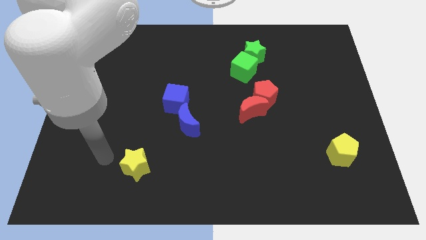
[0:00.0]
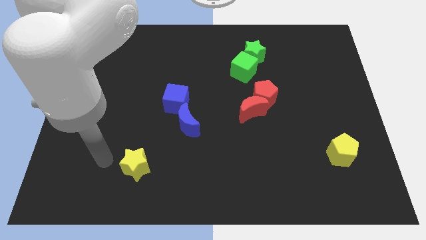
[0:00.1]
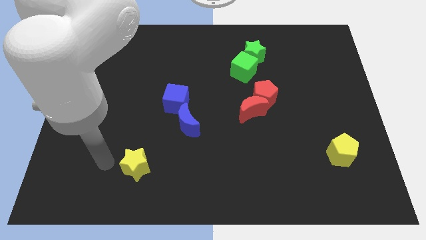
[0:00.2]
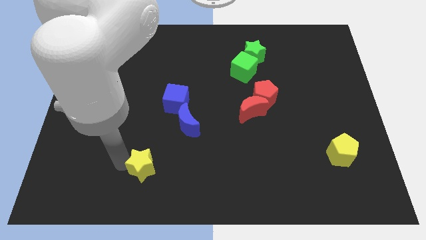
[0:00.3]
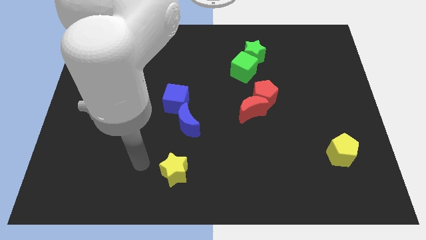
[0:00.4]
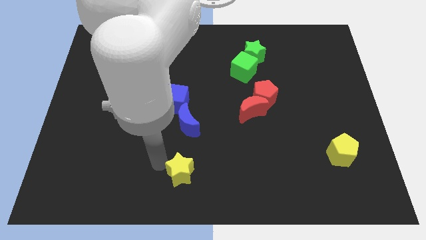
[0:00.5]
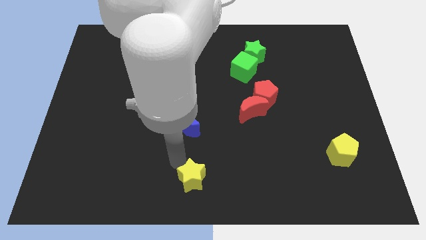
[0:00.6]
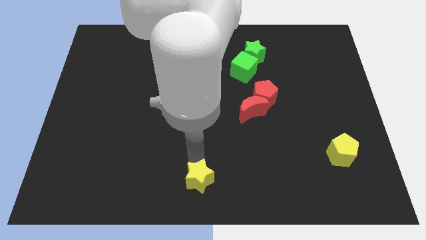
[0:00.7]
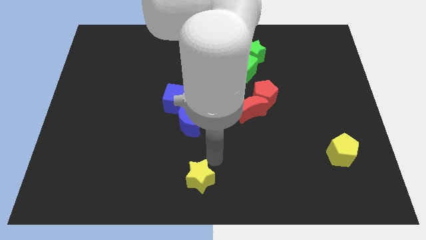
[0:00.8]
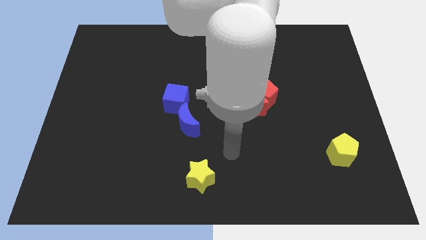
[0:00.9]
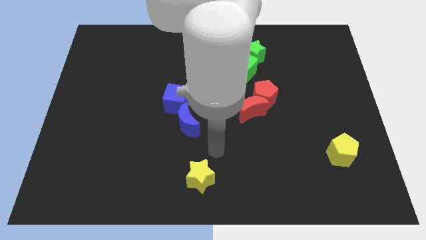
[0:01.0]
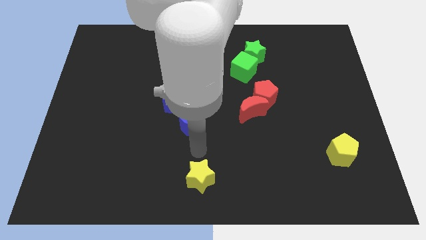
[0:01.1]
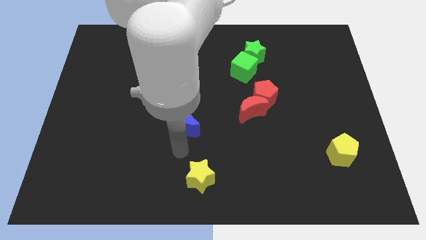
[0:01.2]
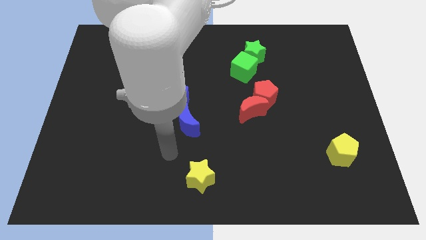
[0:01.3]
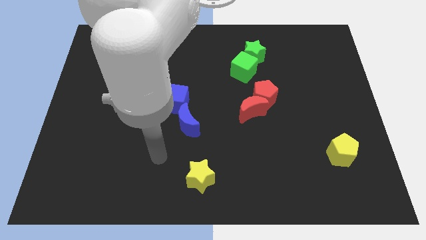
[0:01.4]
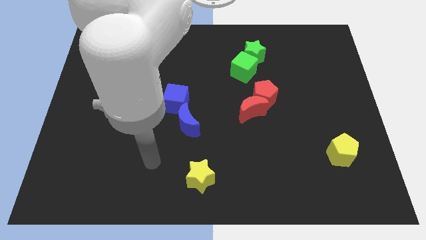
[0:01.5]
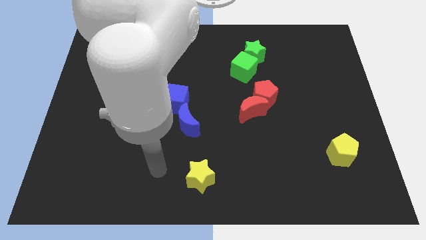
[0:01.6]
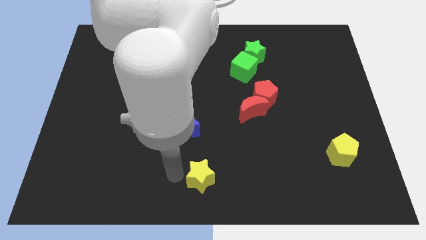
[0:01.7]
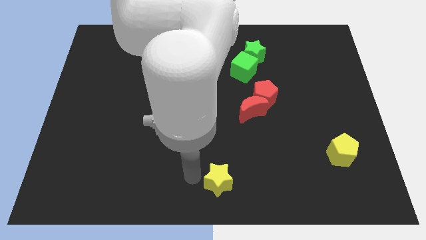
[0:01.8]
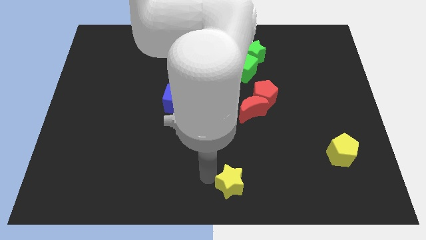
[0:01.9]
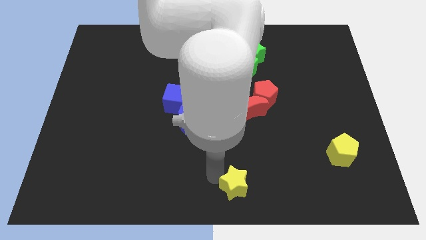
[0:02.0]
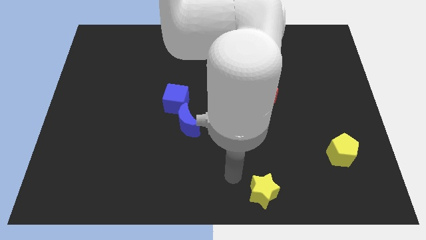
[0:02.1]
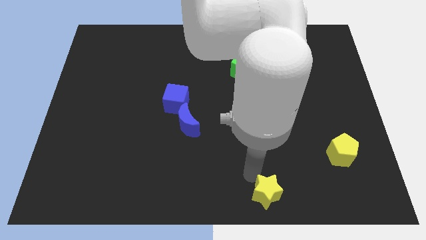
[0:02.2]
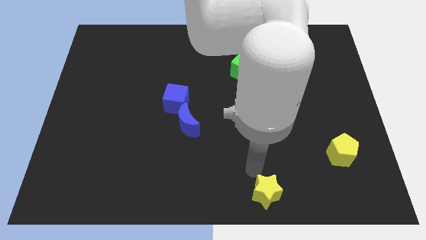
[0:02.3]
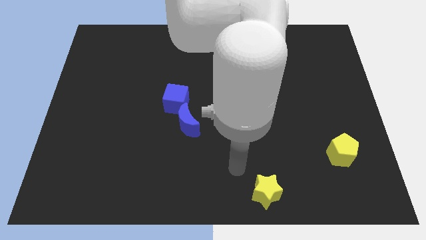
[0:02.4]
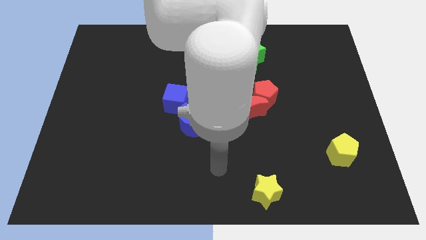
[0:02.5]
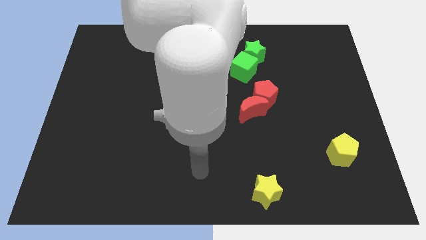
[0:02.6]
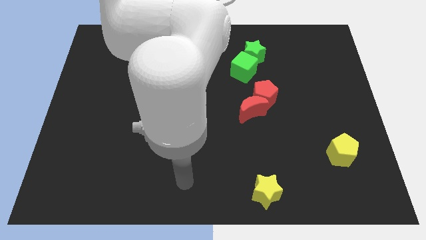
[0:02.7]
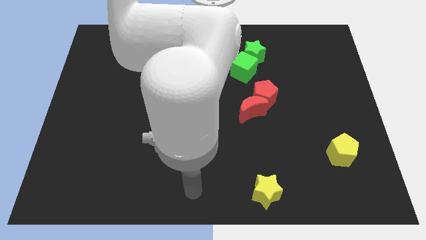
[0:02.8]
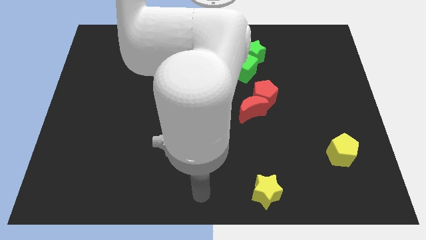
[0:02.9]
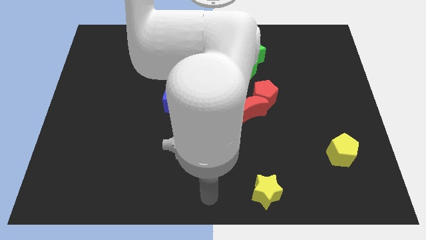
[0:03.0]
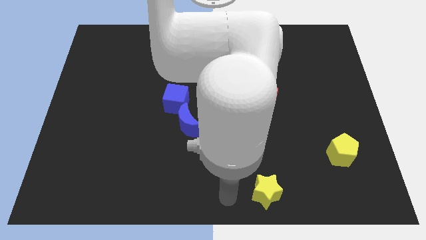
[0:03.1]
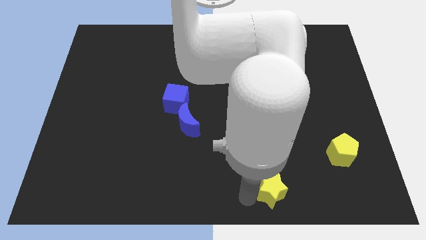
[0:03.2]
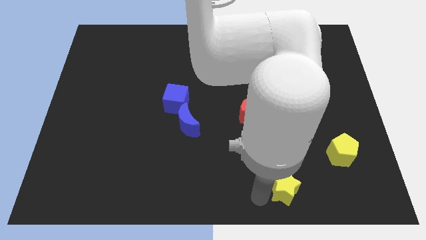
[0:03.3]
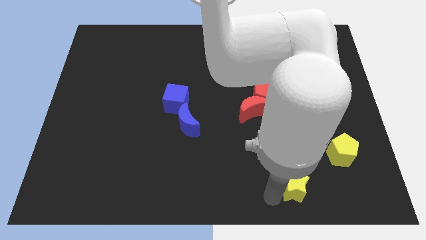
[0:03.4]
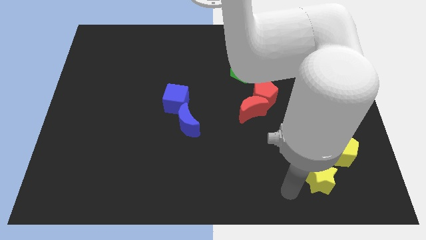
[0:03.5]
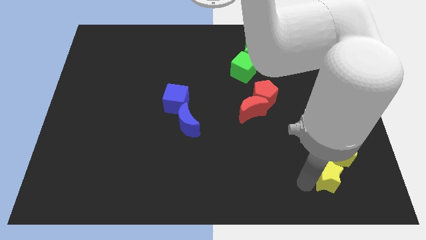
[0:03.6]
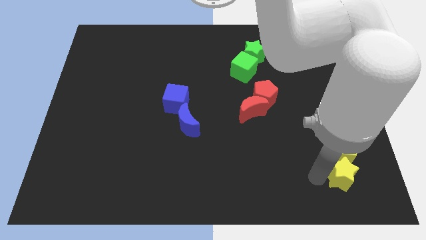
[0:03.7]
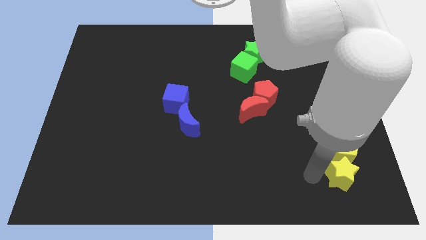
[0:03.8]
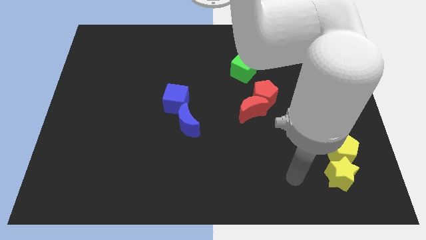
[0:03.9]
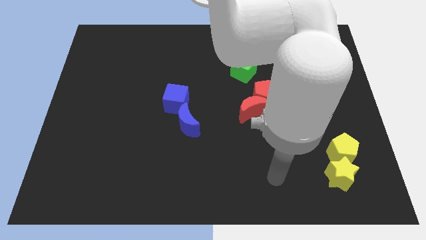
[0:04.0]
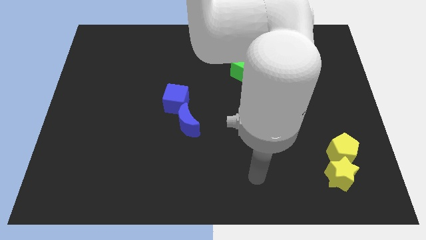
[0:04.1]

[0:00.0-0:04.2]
push the yellow star towards the bottom right corner of the board

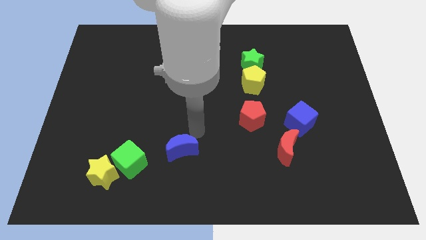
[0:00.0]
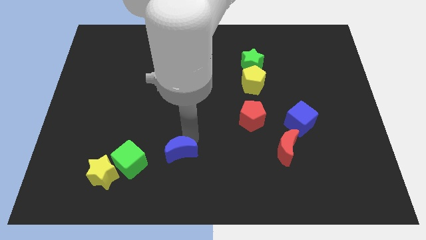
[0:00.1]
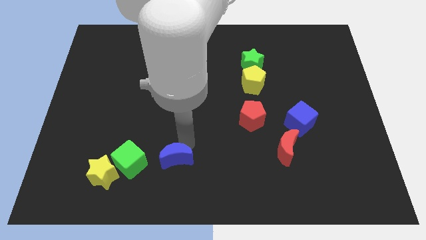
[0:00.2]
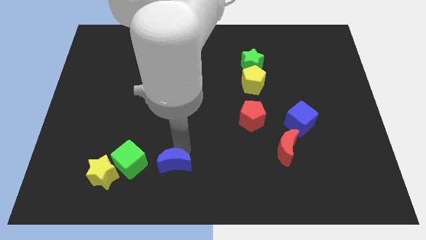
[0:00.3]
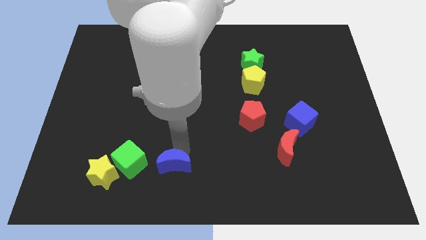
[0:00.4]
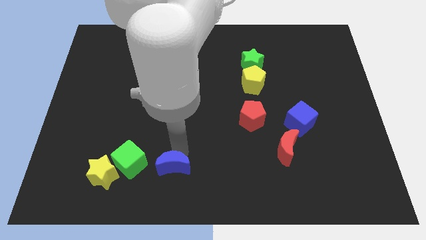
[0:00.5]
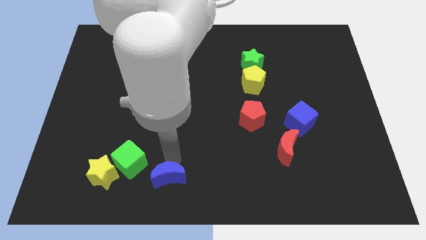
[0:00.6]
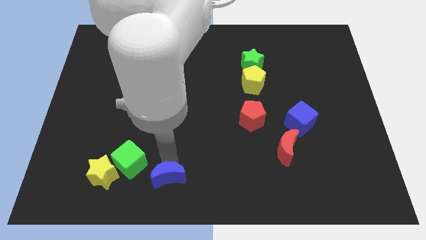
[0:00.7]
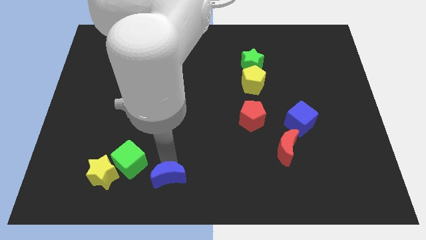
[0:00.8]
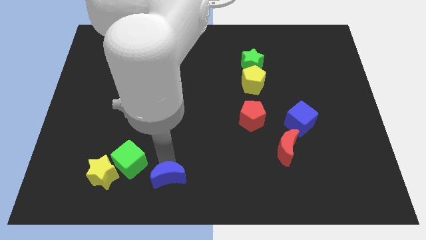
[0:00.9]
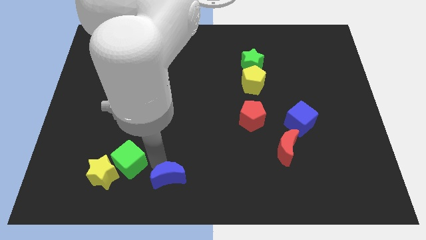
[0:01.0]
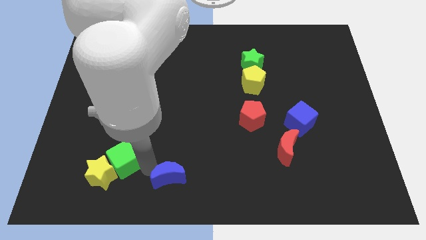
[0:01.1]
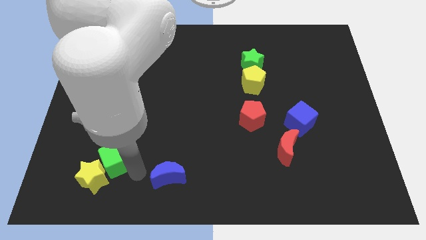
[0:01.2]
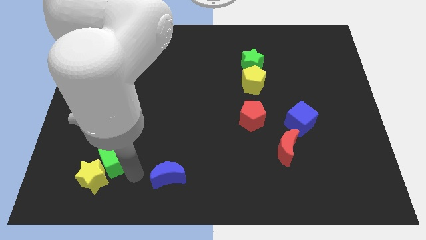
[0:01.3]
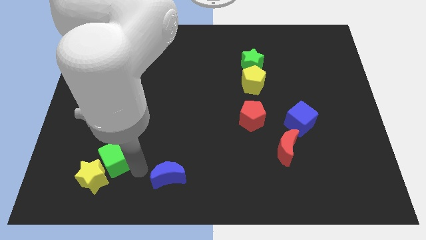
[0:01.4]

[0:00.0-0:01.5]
push the blue moon to the bottom side

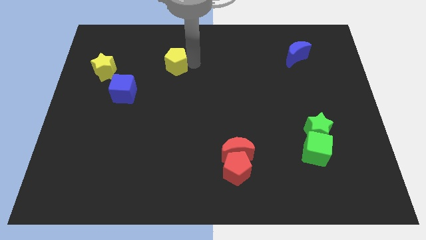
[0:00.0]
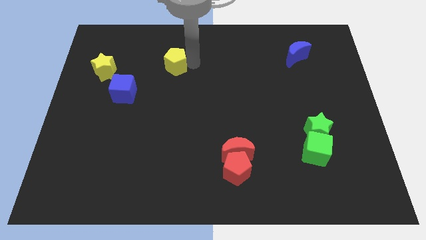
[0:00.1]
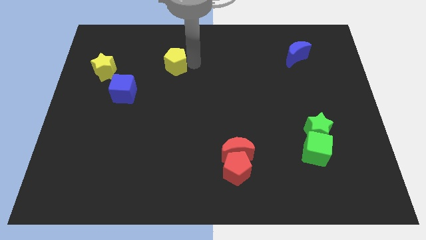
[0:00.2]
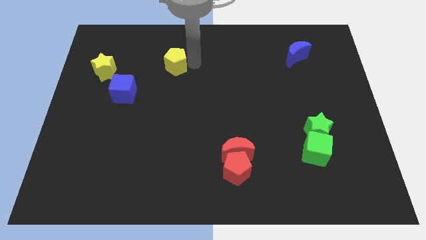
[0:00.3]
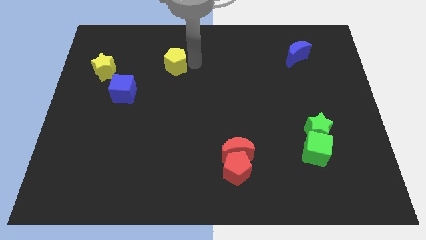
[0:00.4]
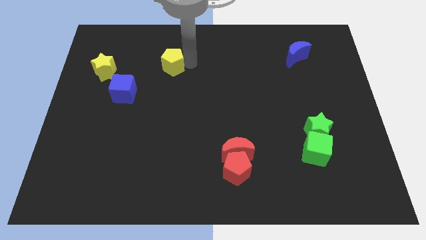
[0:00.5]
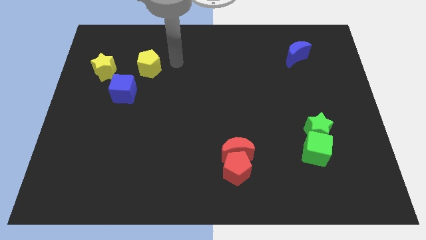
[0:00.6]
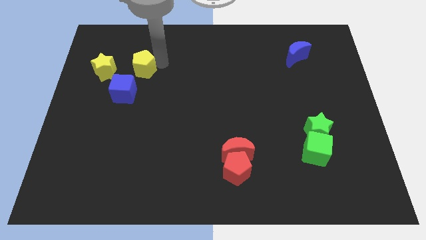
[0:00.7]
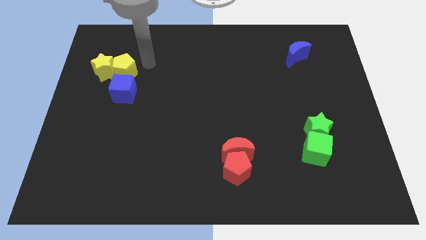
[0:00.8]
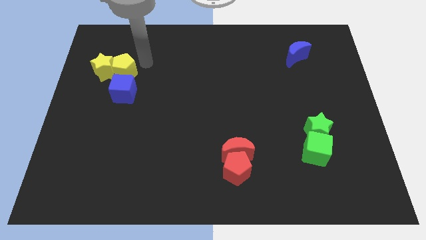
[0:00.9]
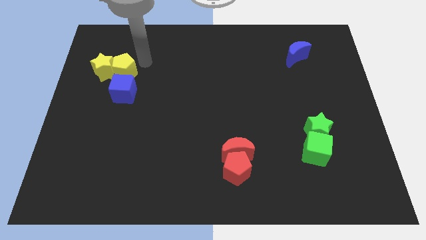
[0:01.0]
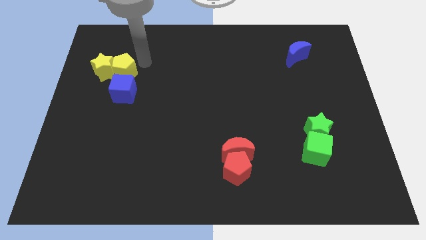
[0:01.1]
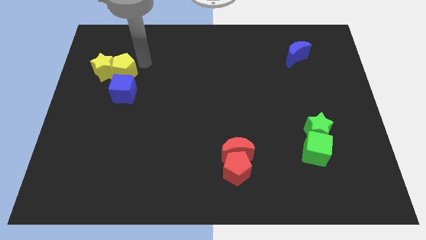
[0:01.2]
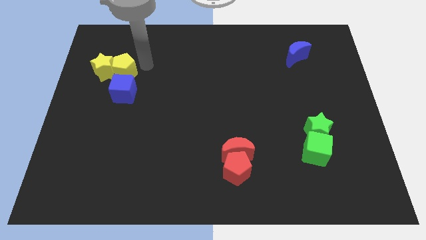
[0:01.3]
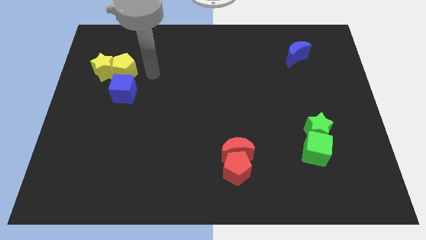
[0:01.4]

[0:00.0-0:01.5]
move yellow pentagon above blue cube

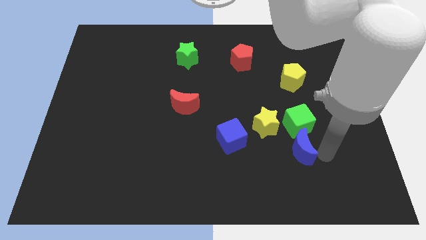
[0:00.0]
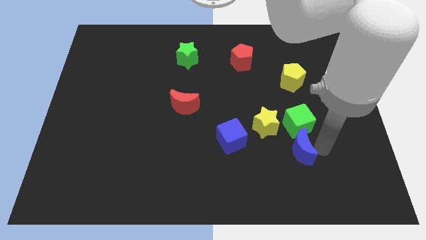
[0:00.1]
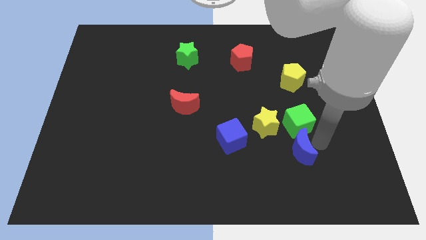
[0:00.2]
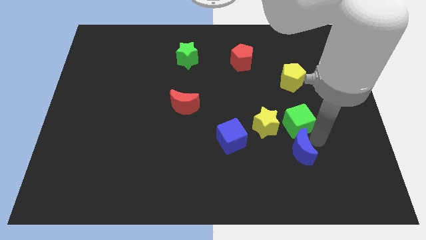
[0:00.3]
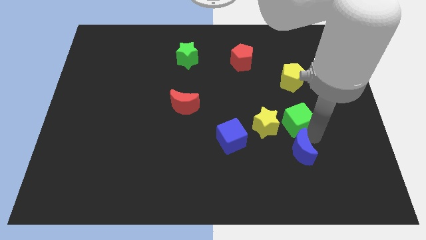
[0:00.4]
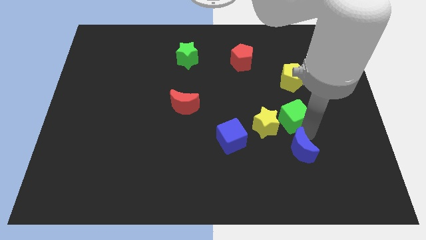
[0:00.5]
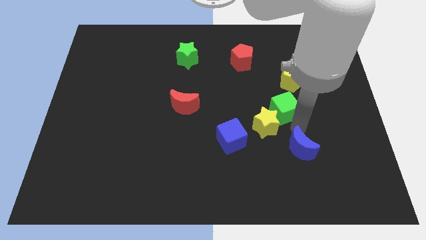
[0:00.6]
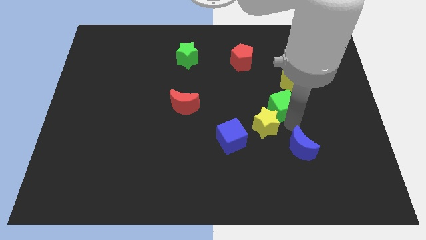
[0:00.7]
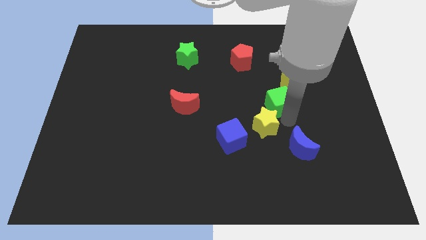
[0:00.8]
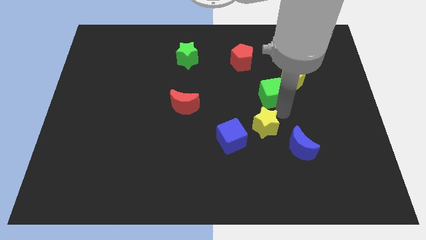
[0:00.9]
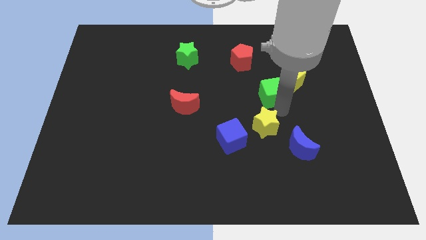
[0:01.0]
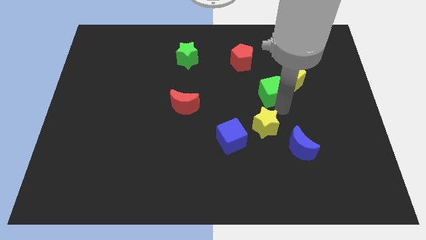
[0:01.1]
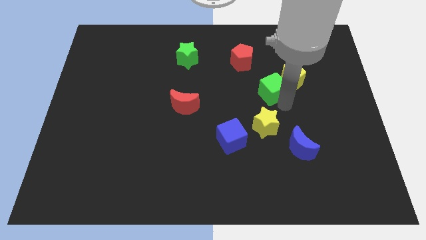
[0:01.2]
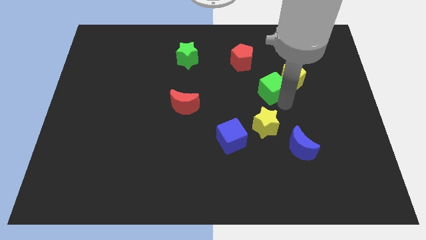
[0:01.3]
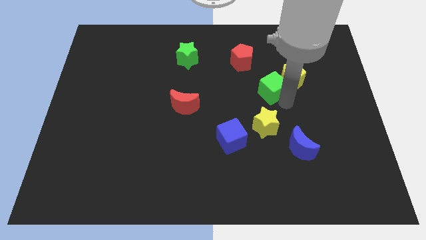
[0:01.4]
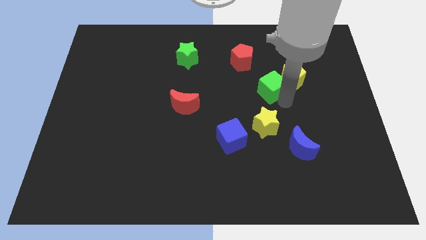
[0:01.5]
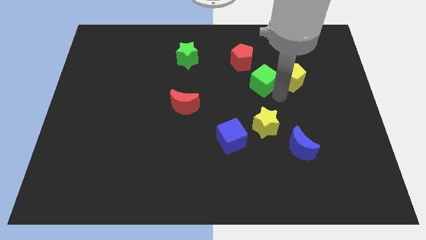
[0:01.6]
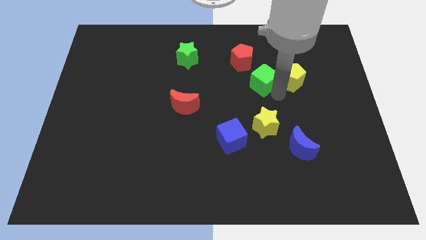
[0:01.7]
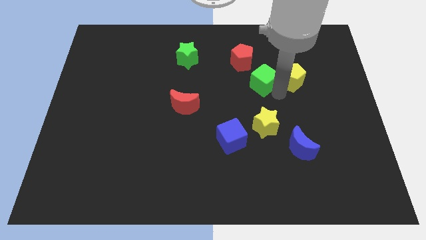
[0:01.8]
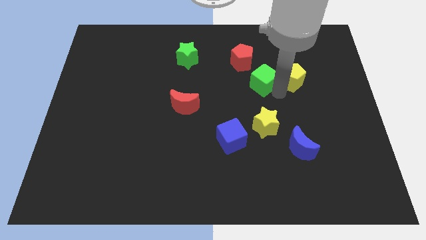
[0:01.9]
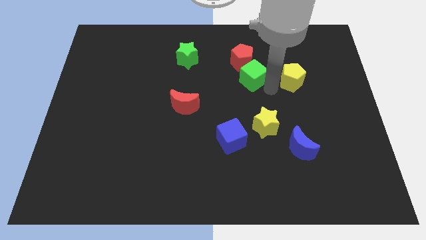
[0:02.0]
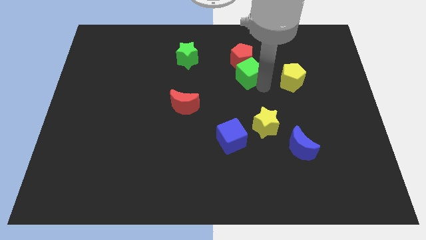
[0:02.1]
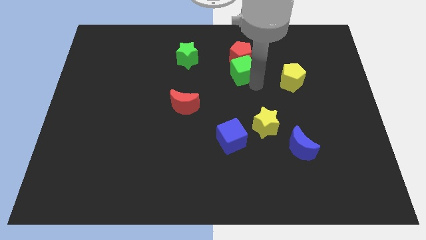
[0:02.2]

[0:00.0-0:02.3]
move the green cube into the red pentagon
